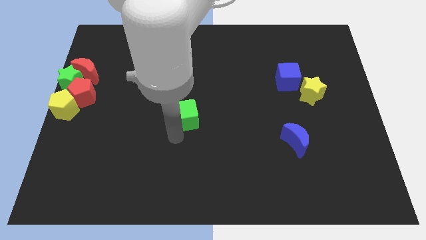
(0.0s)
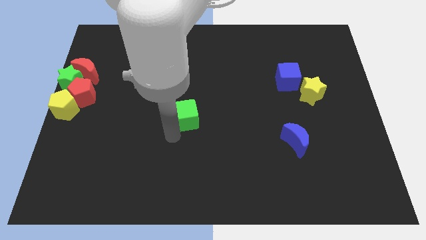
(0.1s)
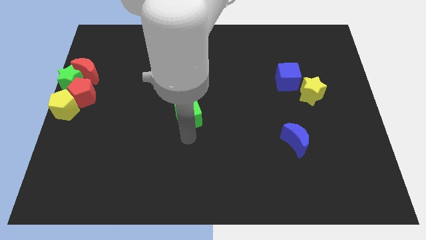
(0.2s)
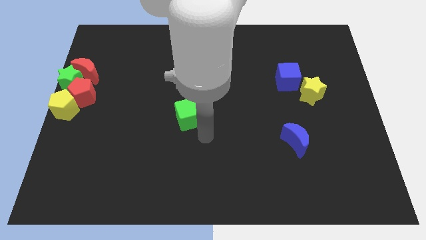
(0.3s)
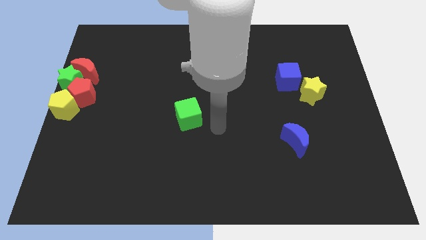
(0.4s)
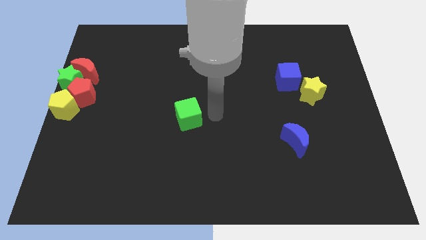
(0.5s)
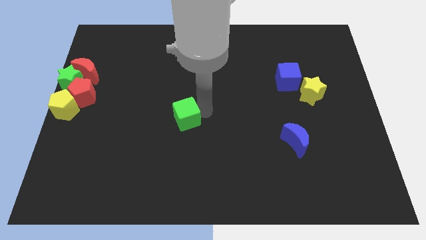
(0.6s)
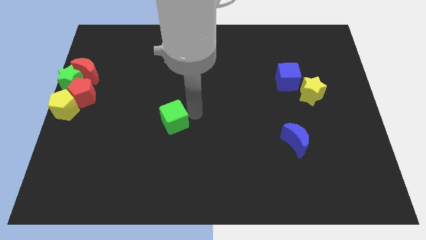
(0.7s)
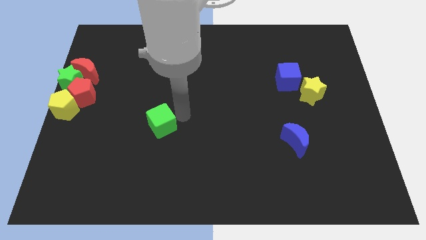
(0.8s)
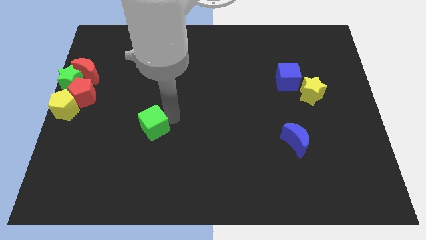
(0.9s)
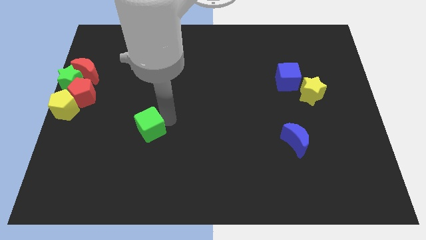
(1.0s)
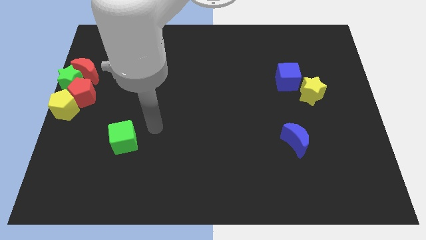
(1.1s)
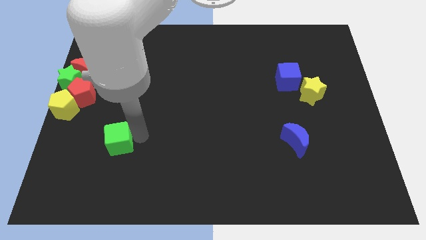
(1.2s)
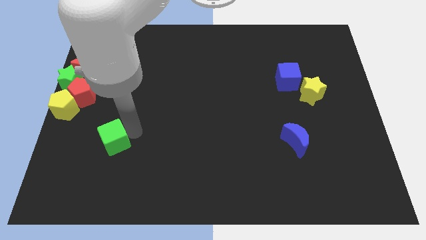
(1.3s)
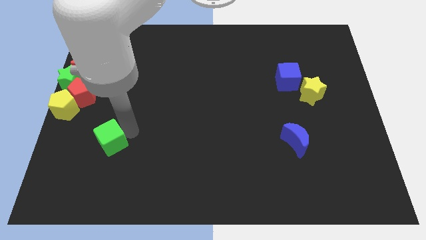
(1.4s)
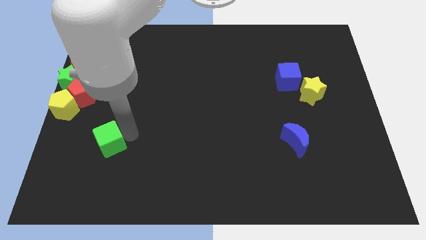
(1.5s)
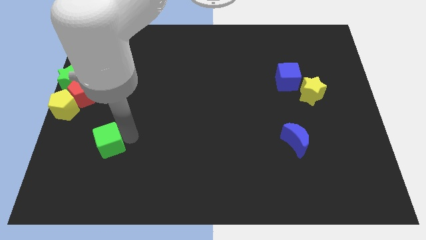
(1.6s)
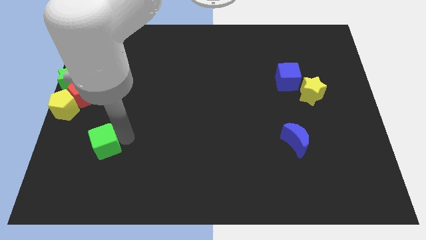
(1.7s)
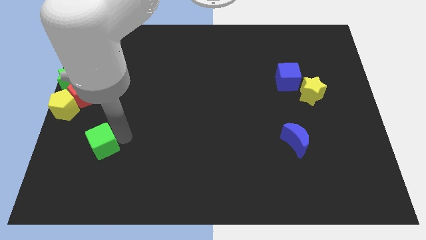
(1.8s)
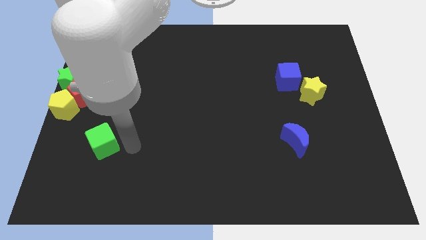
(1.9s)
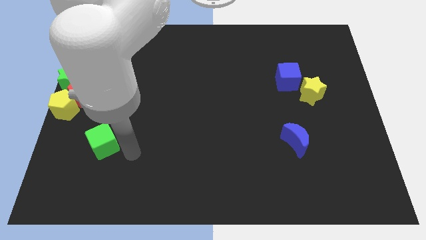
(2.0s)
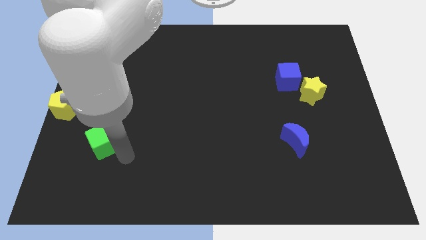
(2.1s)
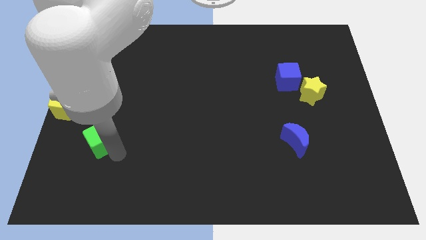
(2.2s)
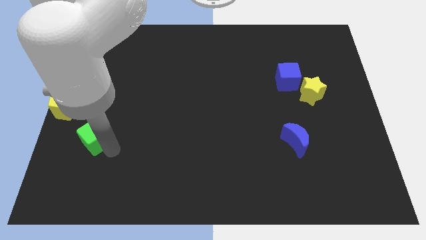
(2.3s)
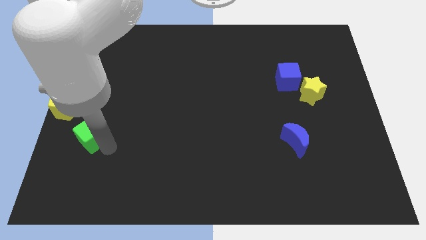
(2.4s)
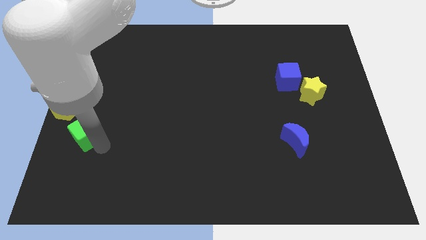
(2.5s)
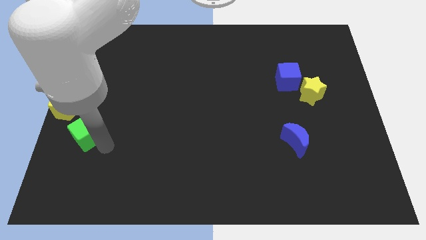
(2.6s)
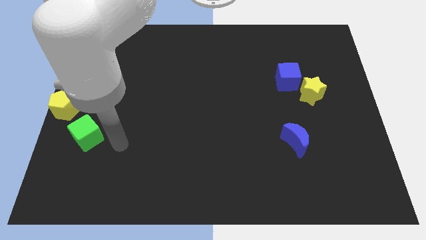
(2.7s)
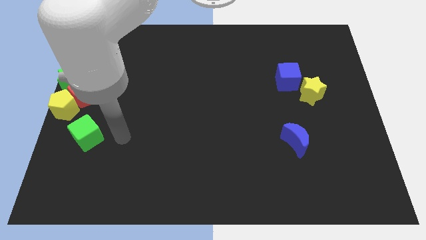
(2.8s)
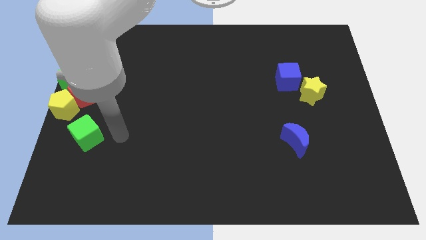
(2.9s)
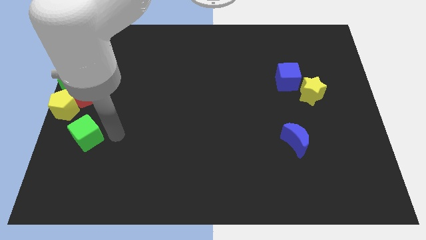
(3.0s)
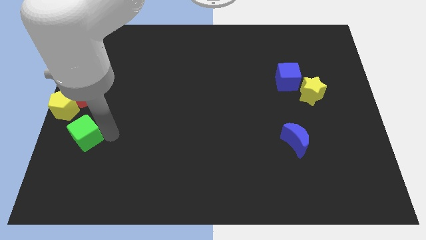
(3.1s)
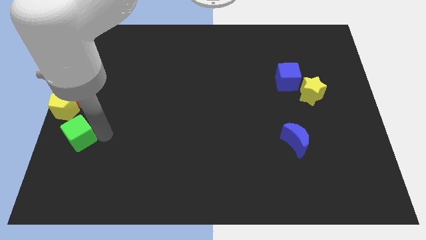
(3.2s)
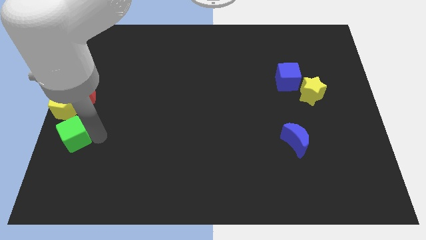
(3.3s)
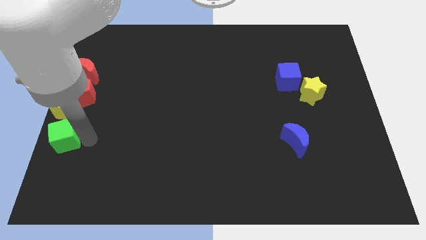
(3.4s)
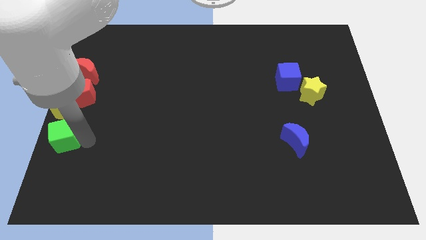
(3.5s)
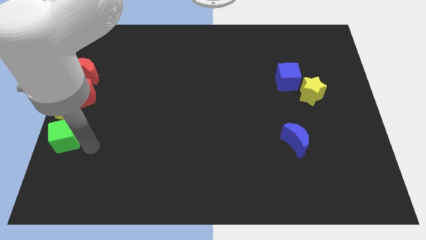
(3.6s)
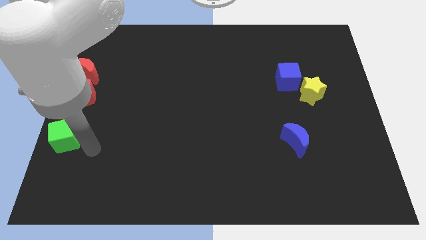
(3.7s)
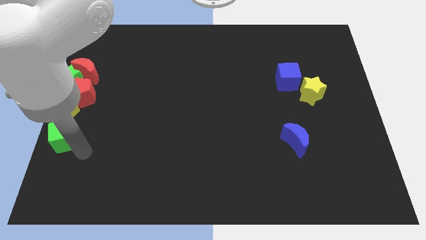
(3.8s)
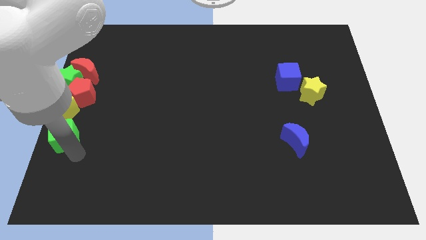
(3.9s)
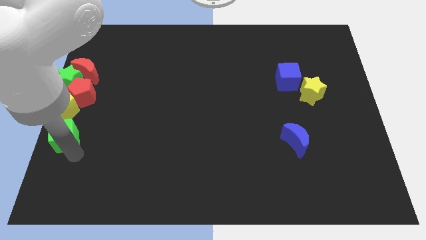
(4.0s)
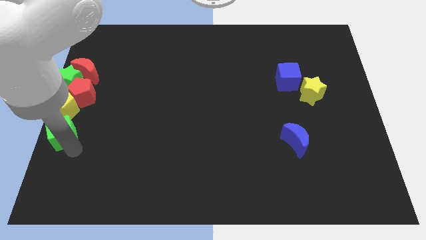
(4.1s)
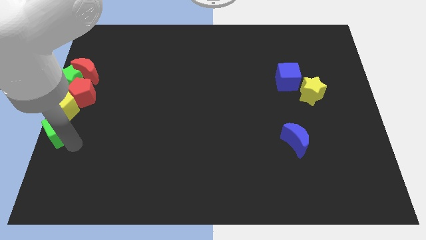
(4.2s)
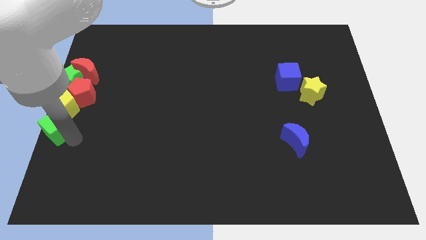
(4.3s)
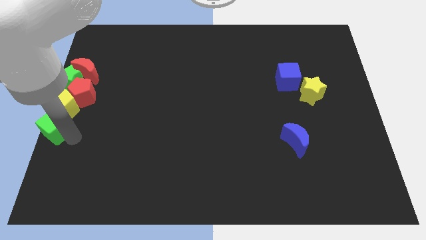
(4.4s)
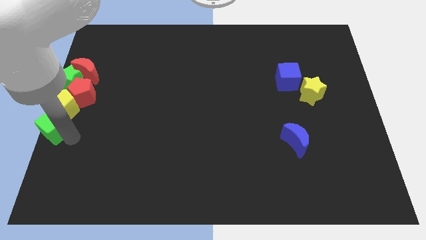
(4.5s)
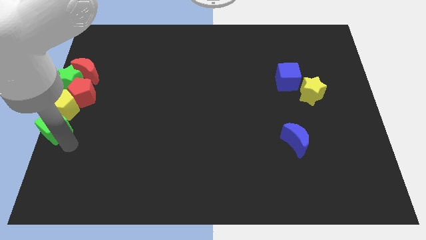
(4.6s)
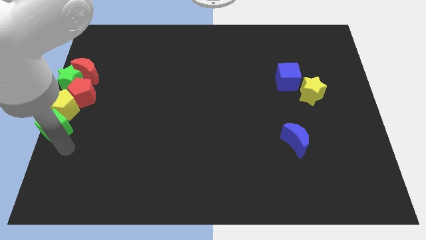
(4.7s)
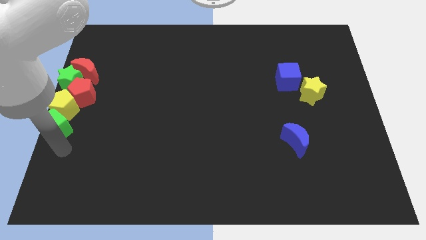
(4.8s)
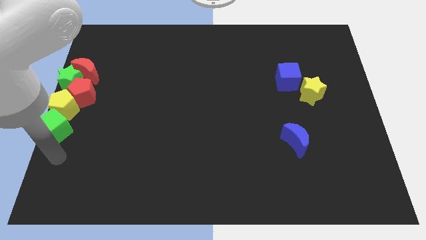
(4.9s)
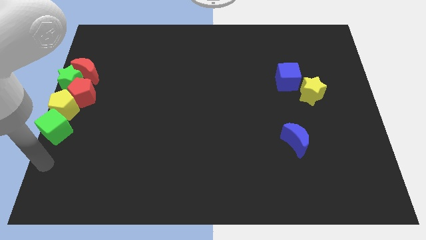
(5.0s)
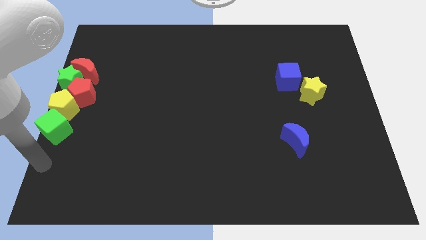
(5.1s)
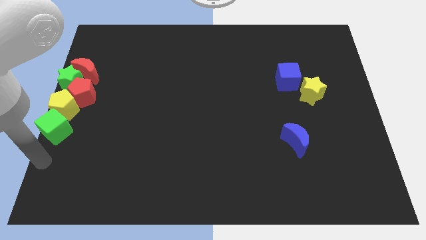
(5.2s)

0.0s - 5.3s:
place the green cube below the yellow pentagon

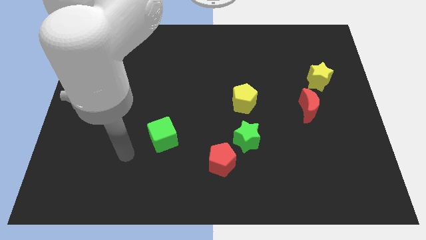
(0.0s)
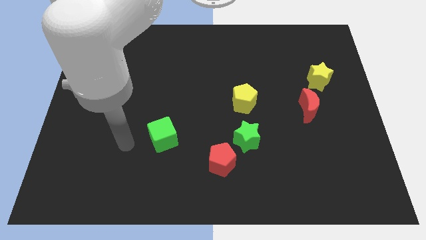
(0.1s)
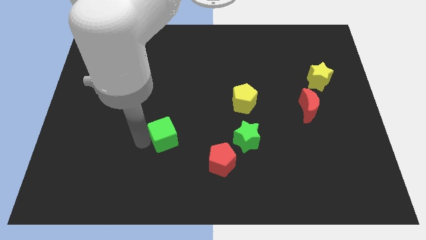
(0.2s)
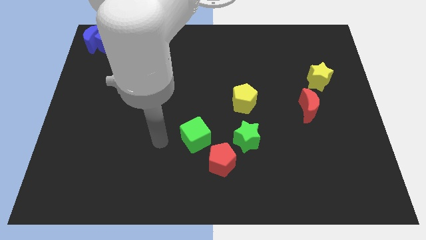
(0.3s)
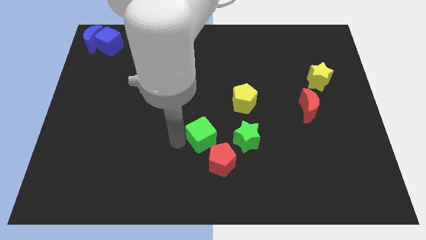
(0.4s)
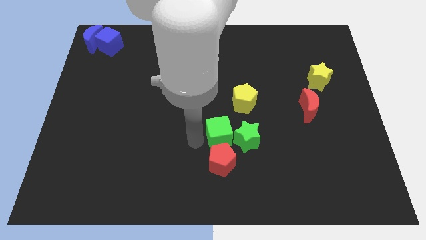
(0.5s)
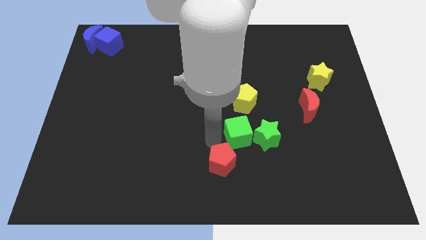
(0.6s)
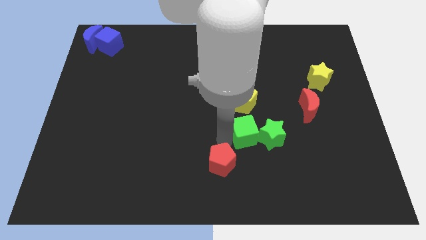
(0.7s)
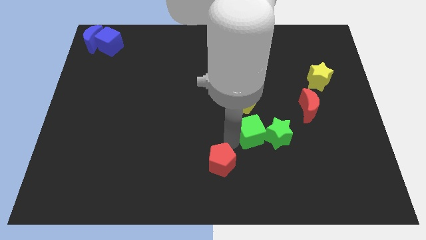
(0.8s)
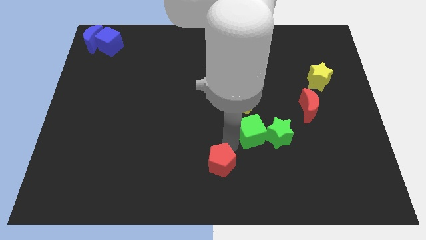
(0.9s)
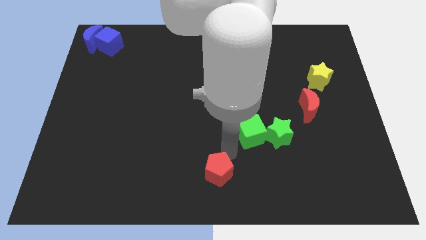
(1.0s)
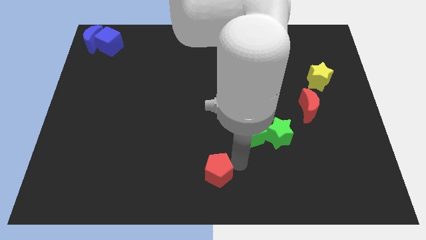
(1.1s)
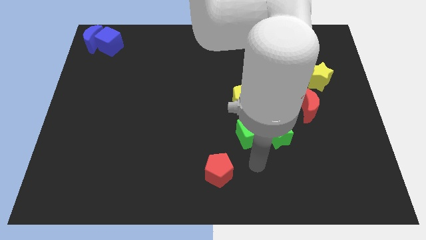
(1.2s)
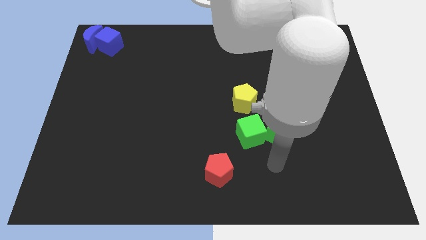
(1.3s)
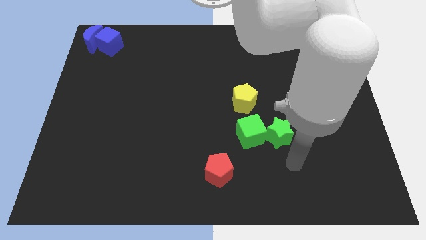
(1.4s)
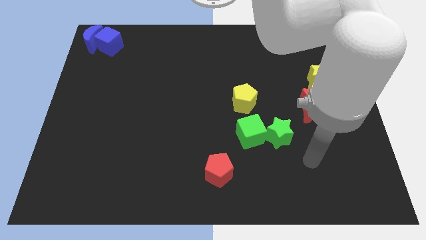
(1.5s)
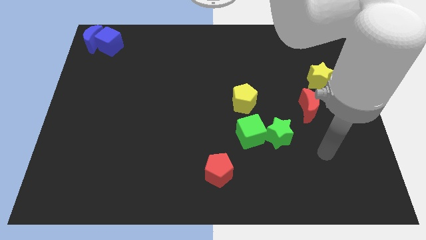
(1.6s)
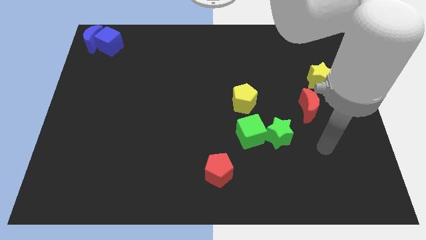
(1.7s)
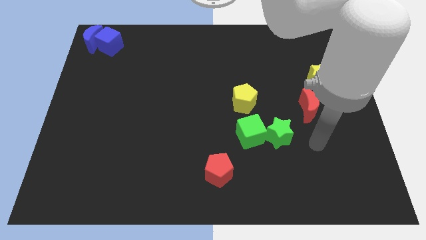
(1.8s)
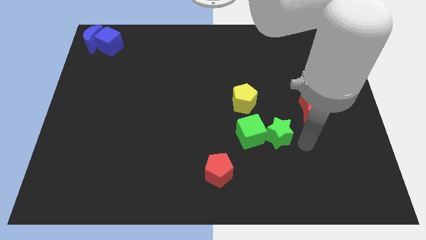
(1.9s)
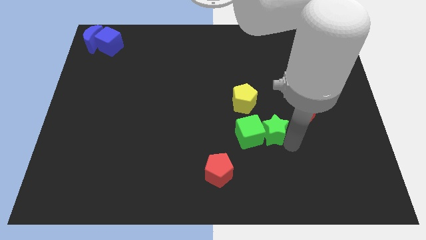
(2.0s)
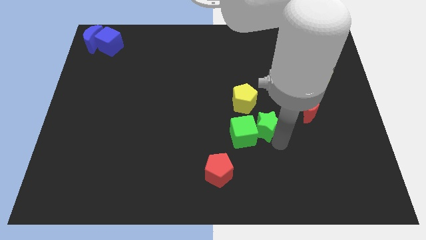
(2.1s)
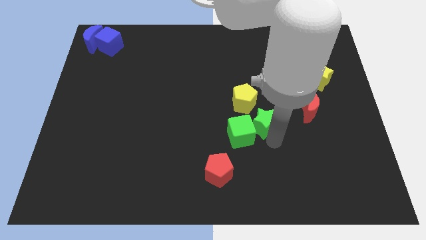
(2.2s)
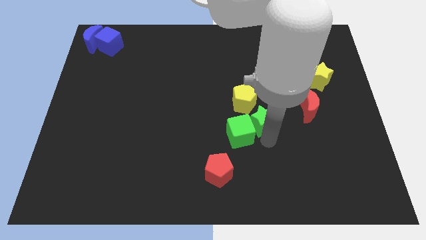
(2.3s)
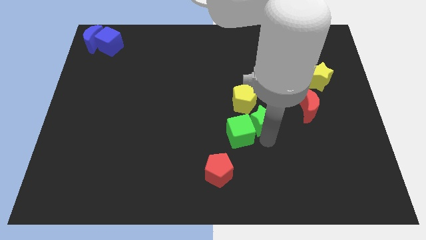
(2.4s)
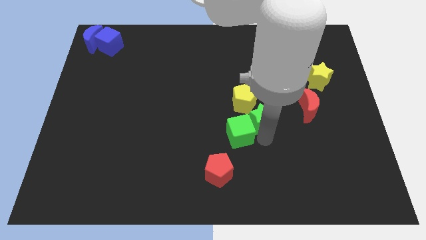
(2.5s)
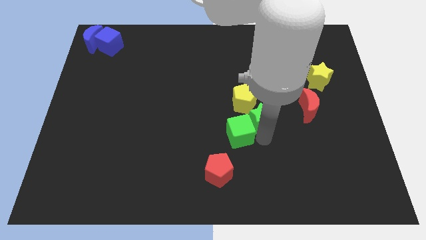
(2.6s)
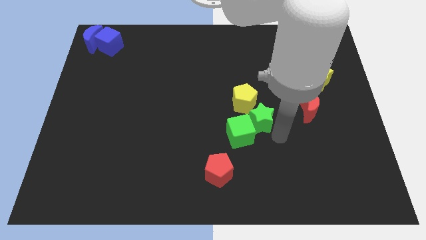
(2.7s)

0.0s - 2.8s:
place the green cube and green star side by side horizontally

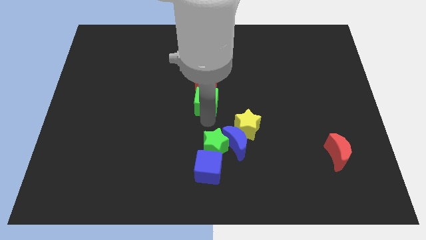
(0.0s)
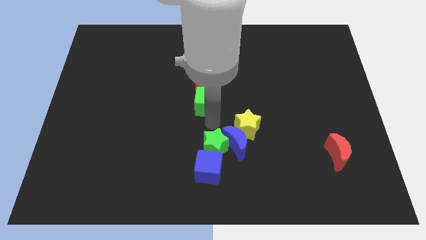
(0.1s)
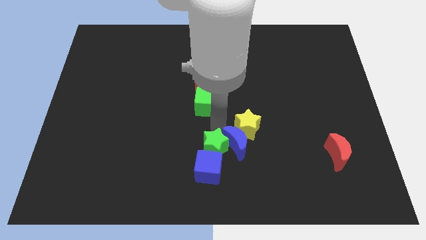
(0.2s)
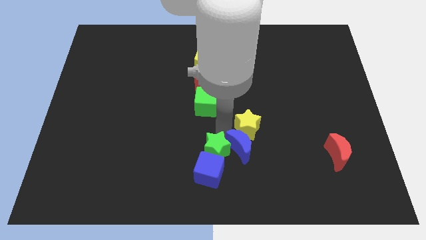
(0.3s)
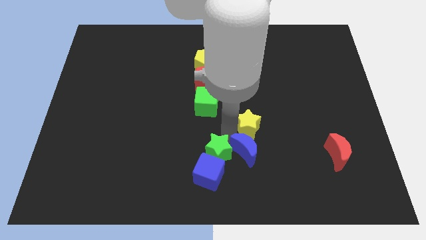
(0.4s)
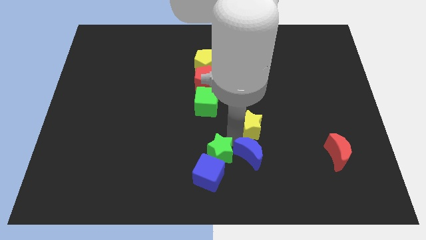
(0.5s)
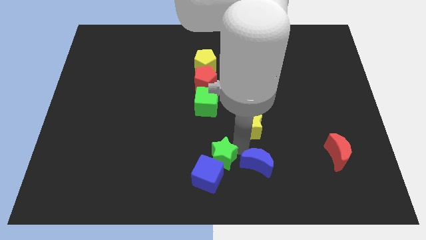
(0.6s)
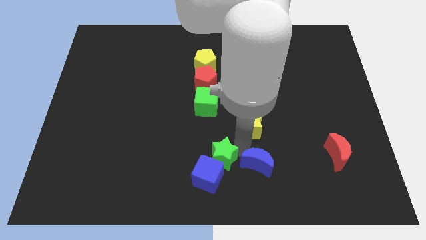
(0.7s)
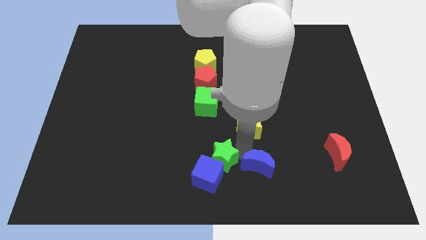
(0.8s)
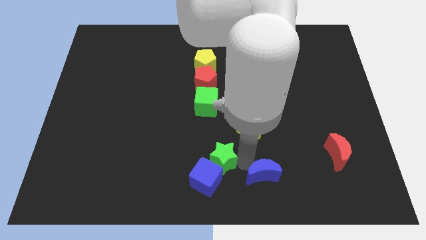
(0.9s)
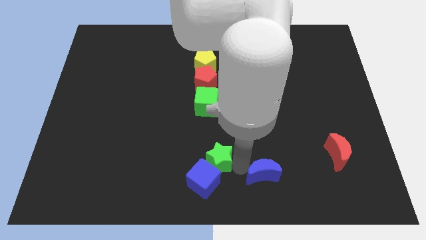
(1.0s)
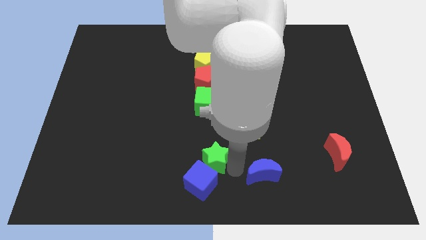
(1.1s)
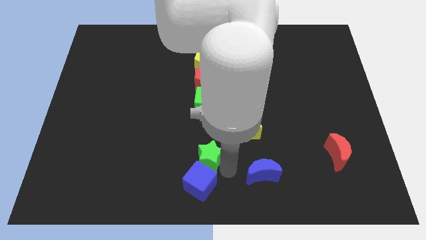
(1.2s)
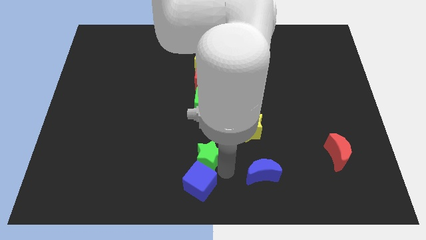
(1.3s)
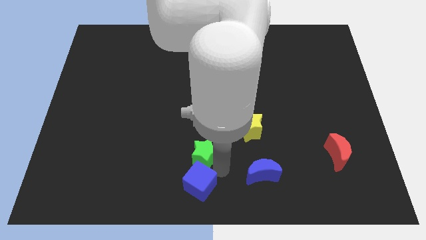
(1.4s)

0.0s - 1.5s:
separate green star and blue moon
